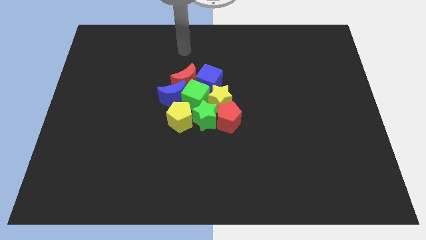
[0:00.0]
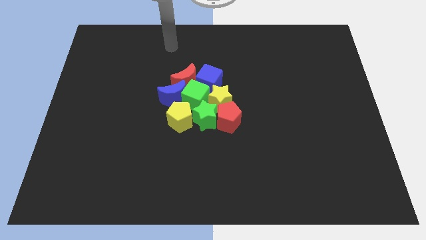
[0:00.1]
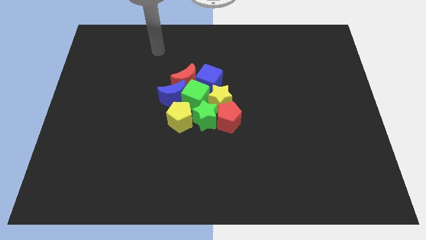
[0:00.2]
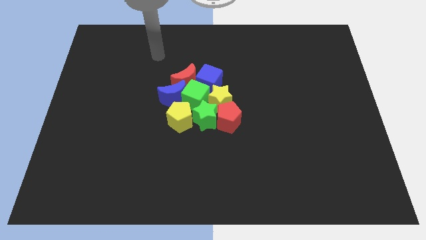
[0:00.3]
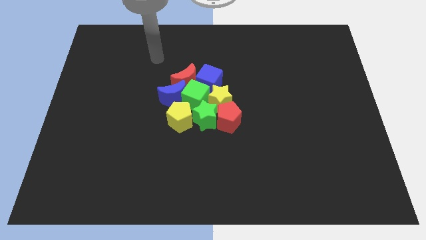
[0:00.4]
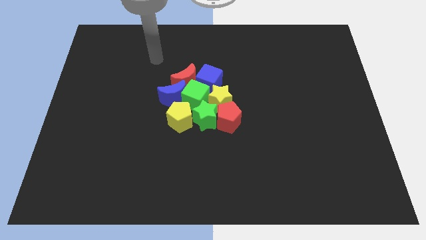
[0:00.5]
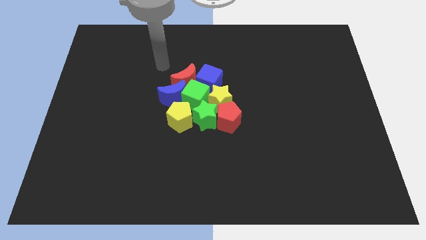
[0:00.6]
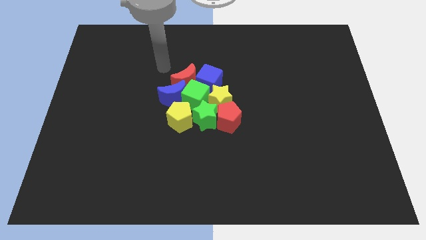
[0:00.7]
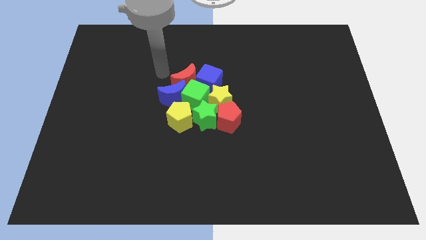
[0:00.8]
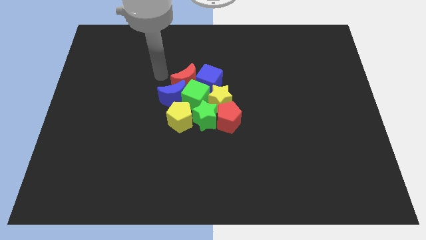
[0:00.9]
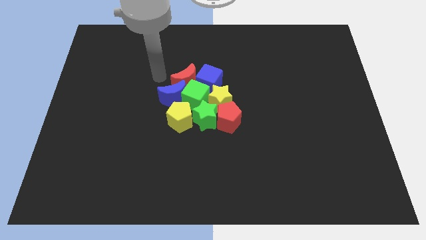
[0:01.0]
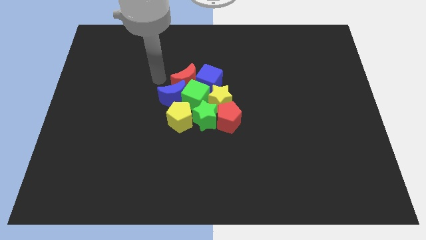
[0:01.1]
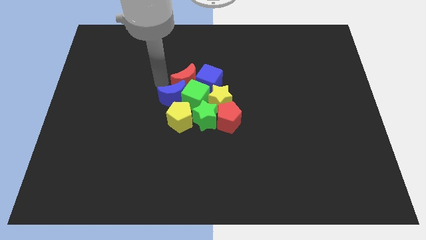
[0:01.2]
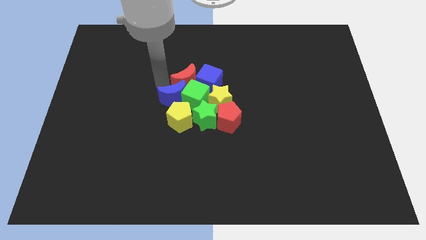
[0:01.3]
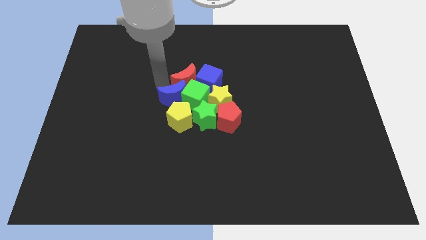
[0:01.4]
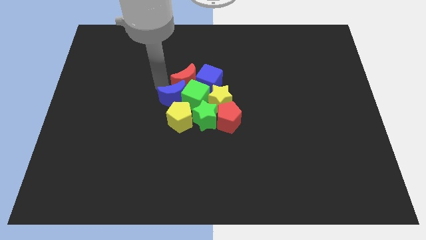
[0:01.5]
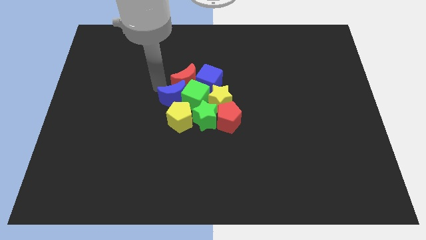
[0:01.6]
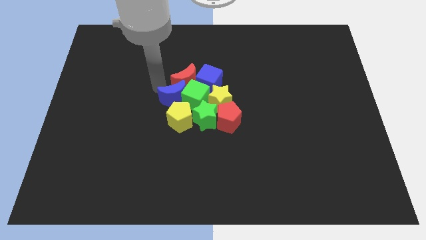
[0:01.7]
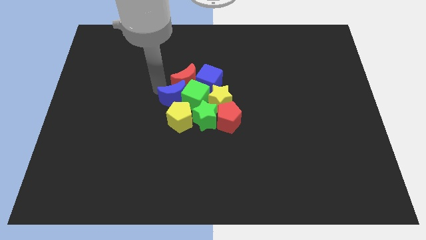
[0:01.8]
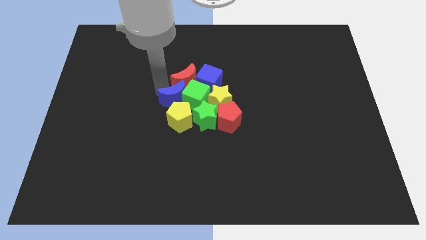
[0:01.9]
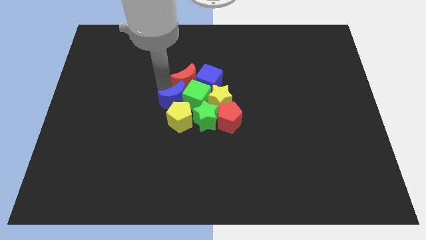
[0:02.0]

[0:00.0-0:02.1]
place the arm near the blue moon

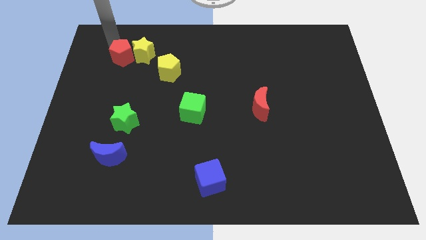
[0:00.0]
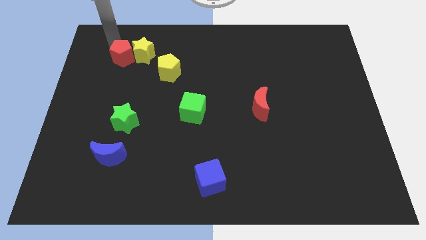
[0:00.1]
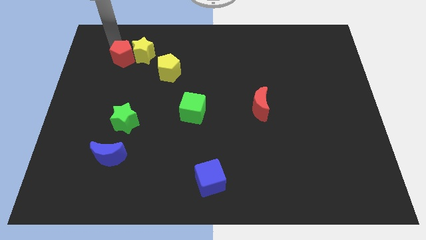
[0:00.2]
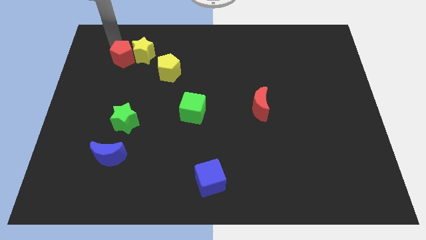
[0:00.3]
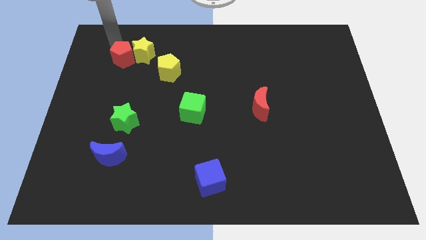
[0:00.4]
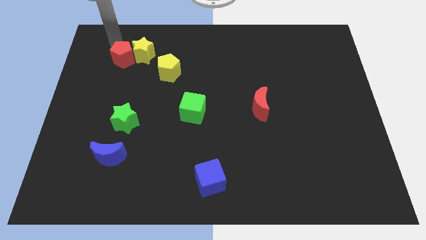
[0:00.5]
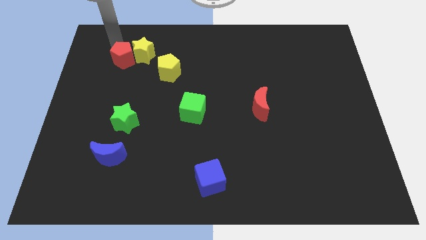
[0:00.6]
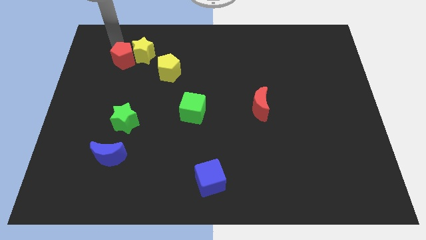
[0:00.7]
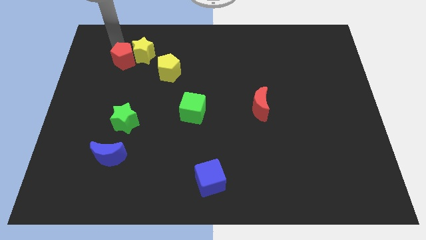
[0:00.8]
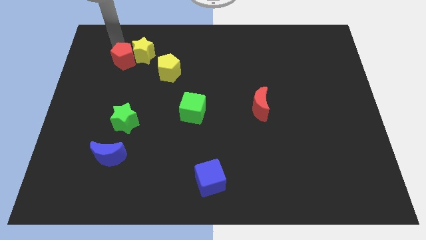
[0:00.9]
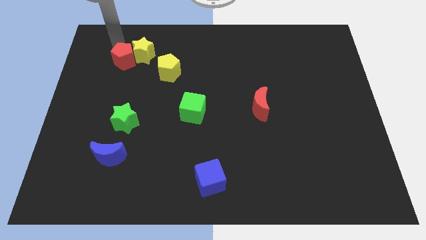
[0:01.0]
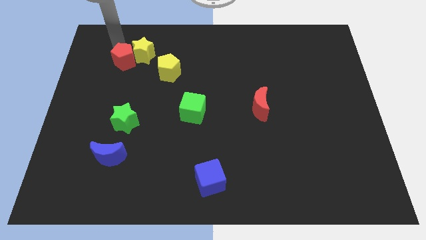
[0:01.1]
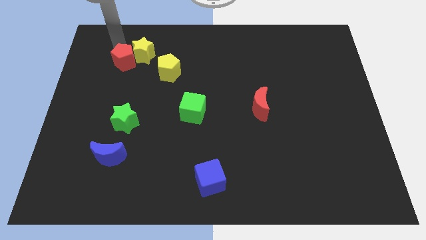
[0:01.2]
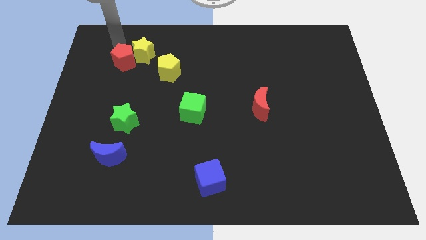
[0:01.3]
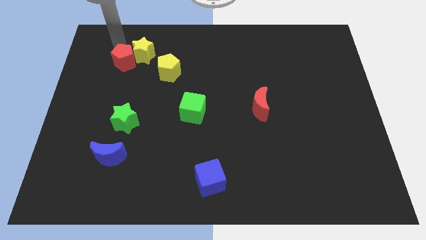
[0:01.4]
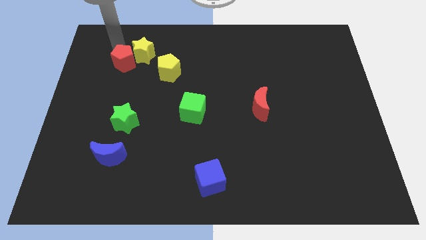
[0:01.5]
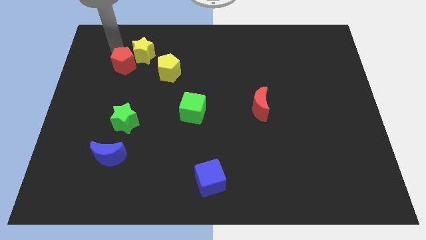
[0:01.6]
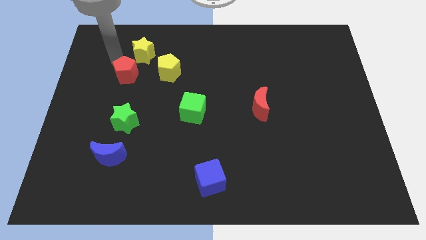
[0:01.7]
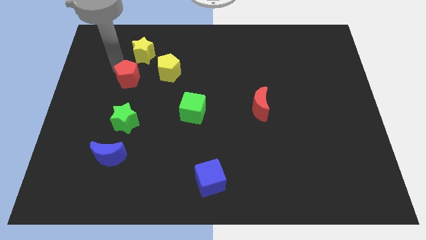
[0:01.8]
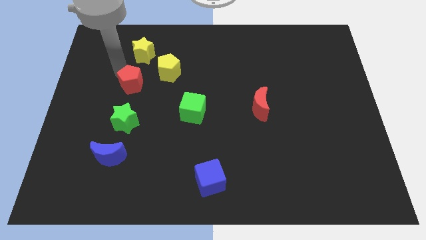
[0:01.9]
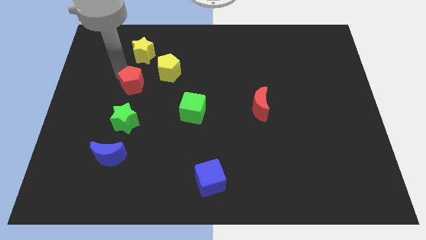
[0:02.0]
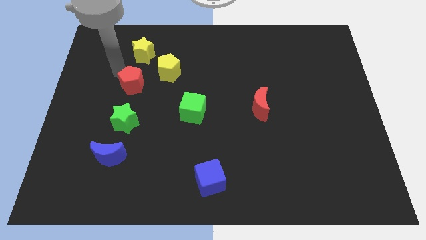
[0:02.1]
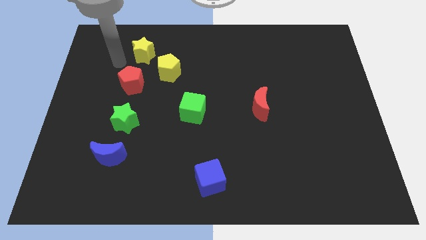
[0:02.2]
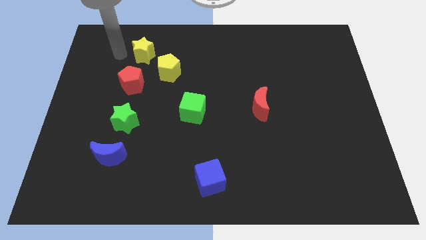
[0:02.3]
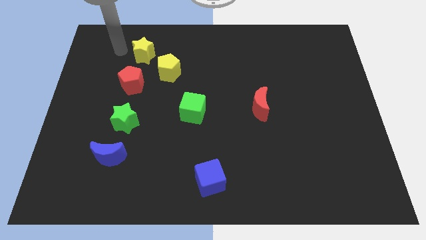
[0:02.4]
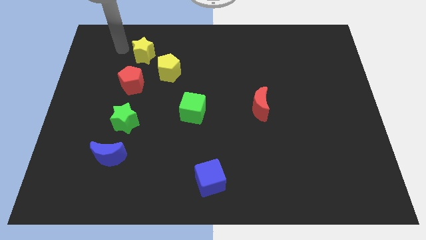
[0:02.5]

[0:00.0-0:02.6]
push the red pentagon between the yellow star and green star

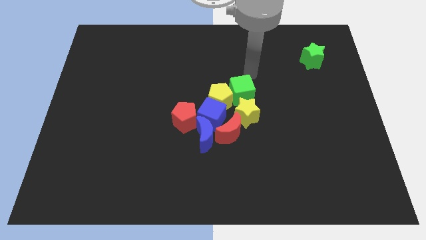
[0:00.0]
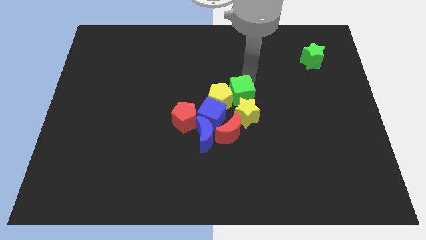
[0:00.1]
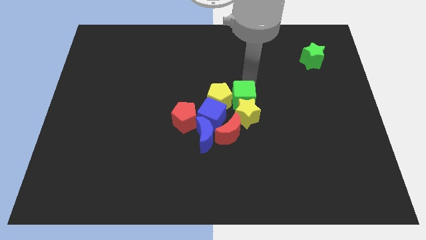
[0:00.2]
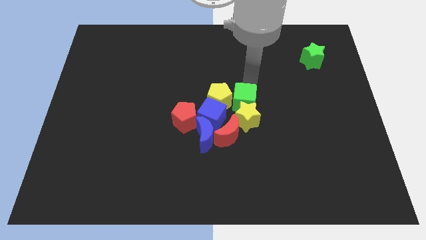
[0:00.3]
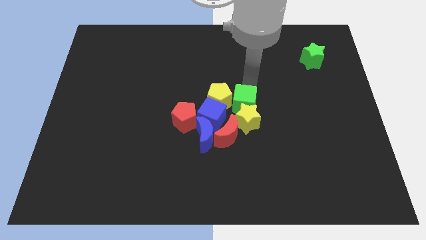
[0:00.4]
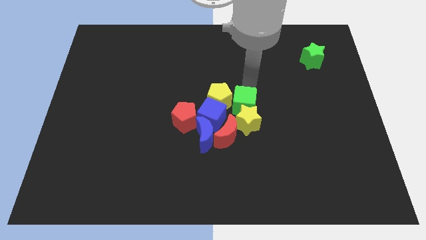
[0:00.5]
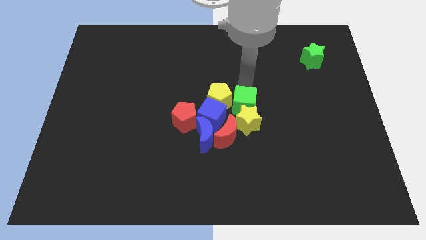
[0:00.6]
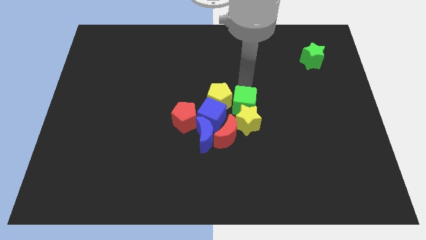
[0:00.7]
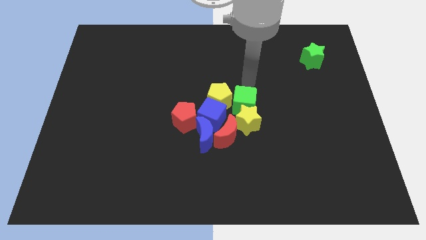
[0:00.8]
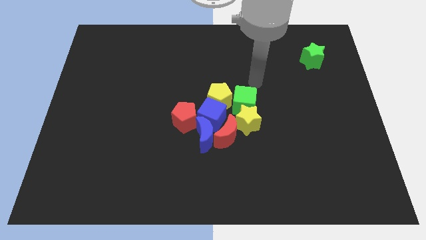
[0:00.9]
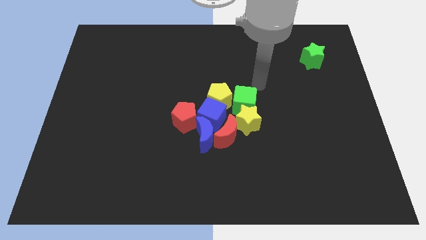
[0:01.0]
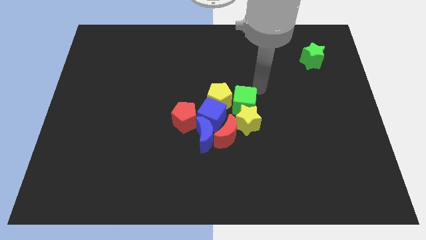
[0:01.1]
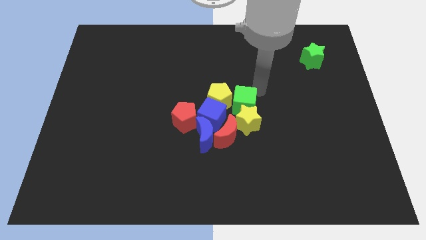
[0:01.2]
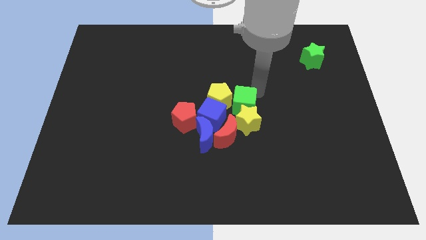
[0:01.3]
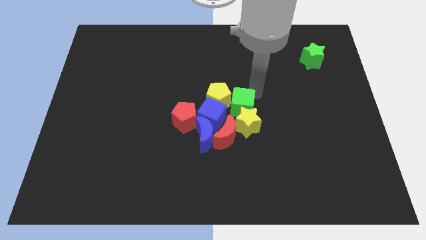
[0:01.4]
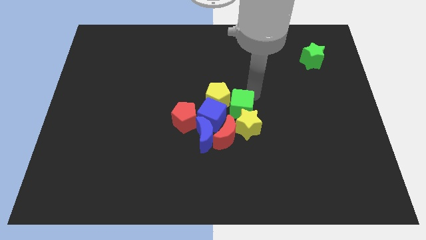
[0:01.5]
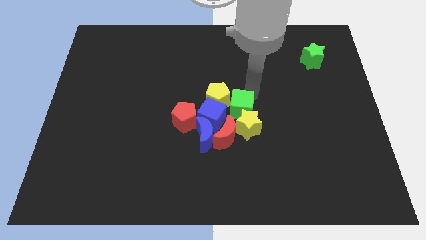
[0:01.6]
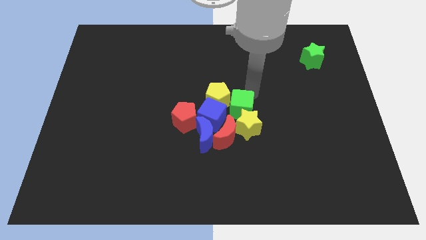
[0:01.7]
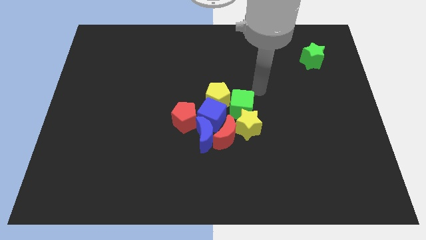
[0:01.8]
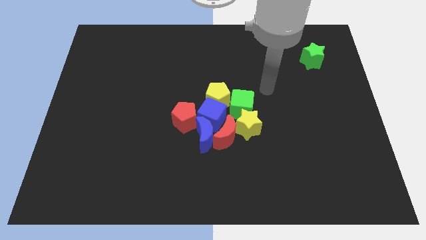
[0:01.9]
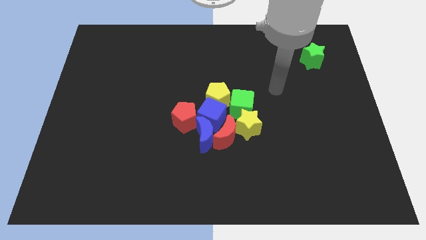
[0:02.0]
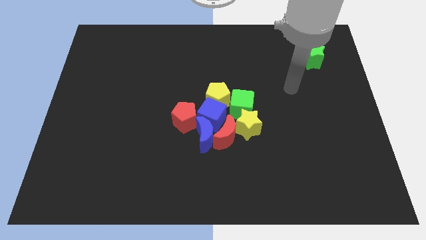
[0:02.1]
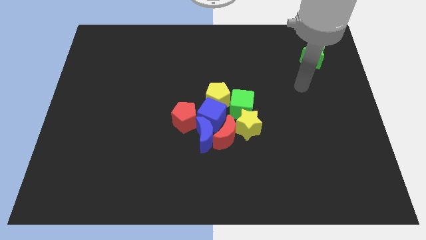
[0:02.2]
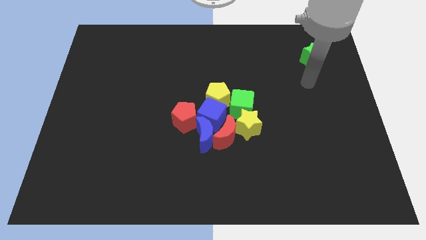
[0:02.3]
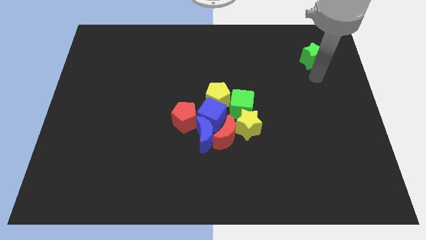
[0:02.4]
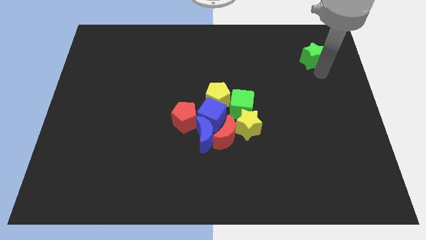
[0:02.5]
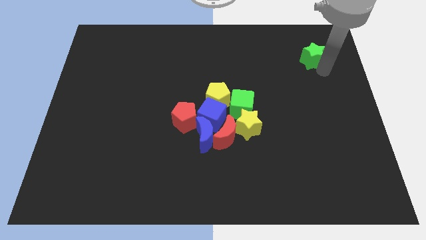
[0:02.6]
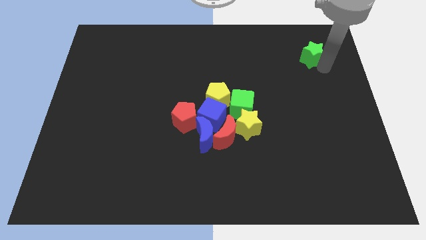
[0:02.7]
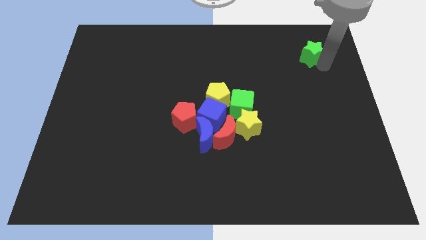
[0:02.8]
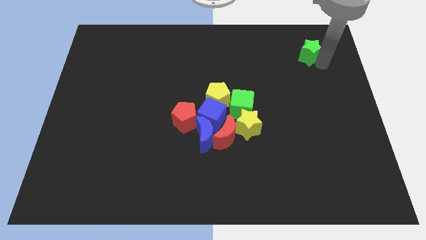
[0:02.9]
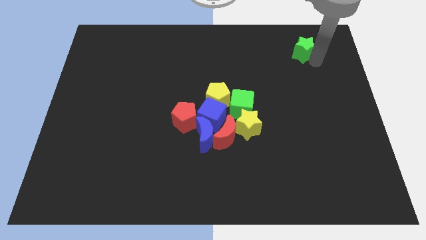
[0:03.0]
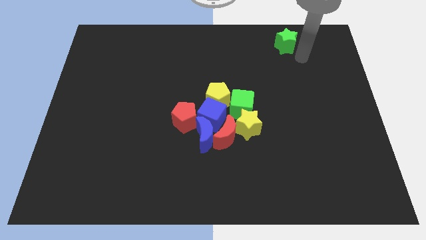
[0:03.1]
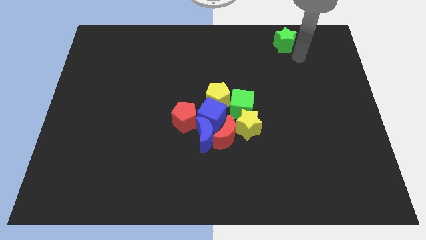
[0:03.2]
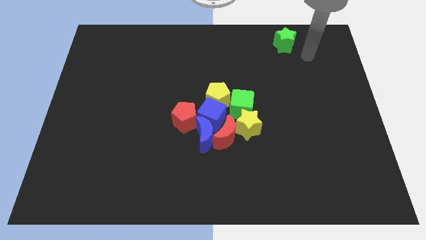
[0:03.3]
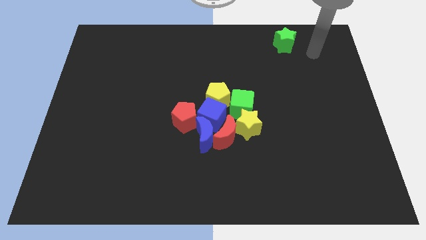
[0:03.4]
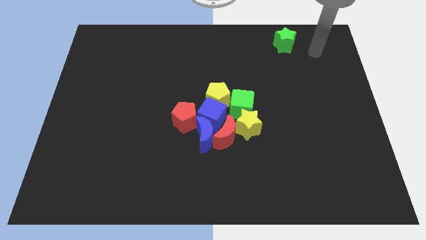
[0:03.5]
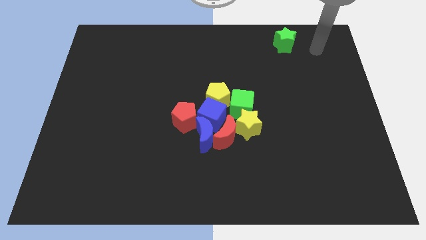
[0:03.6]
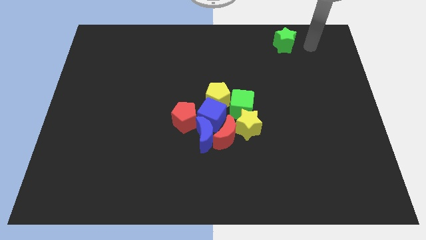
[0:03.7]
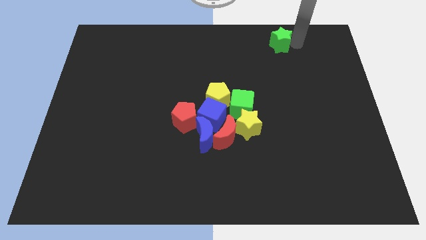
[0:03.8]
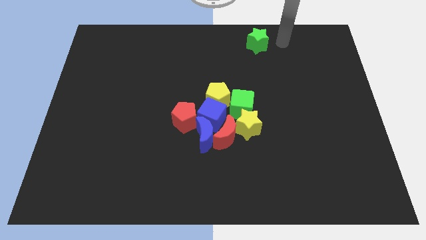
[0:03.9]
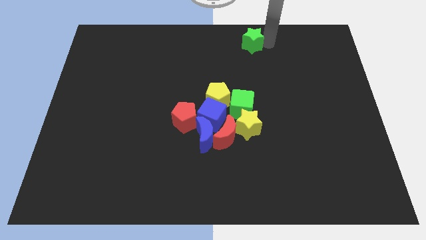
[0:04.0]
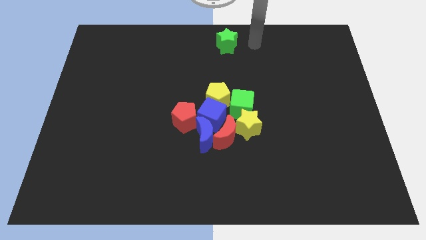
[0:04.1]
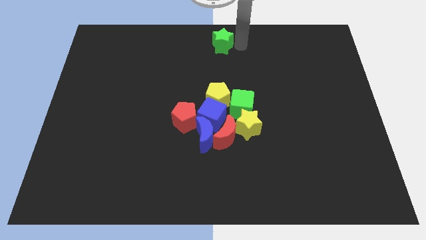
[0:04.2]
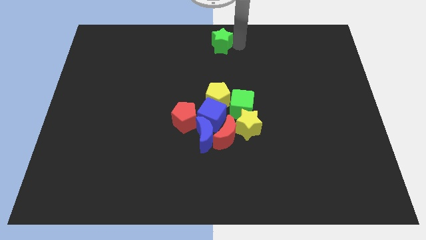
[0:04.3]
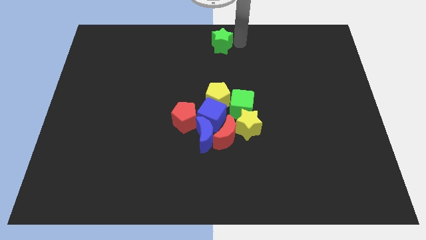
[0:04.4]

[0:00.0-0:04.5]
push green star above yellow pentagon

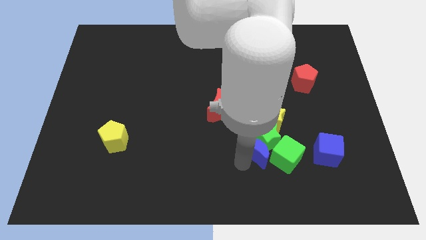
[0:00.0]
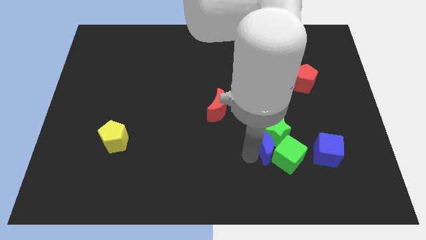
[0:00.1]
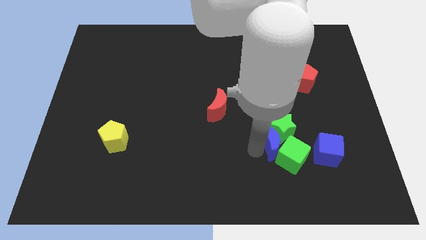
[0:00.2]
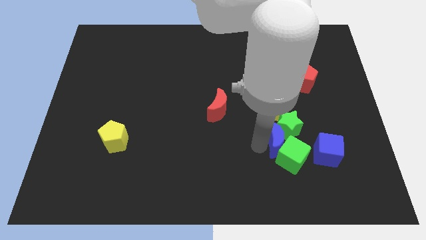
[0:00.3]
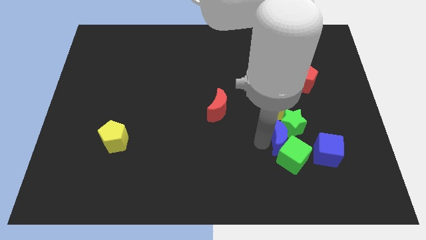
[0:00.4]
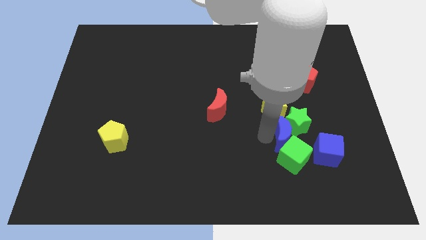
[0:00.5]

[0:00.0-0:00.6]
push the blue crescent along with yellow star in between the yellow star and the green cube
